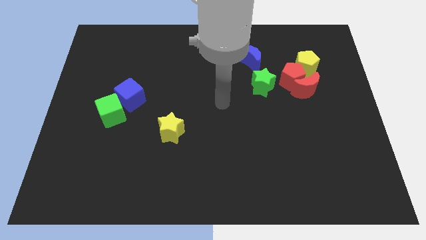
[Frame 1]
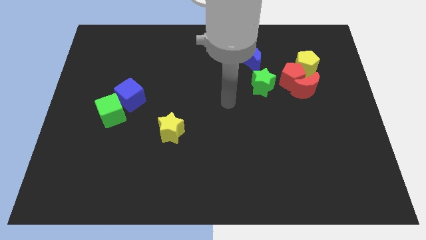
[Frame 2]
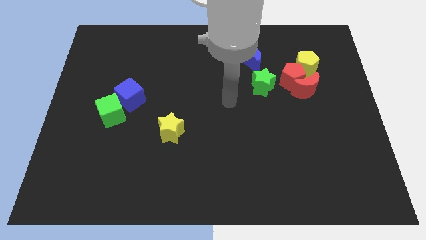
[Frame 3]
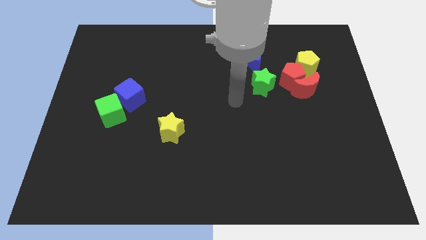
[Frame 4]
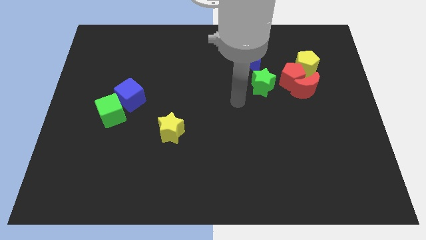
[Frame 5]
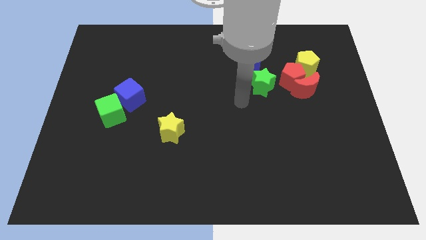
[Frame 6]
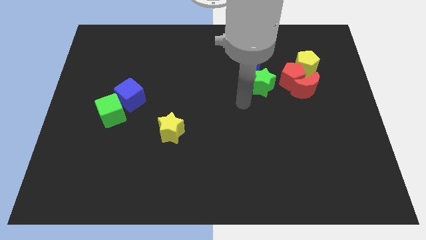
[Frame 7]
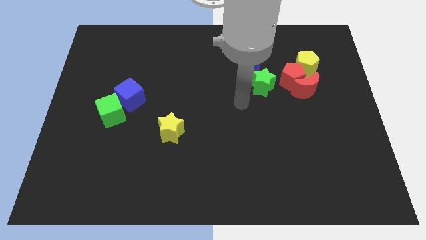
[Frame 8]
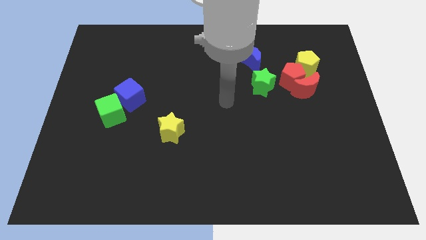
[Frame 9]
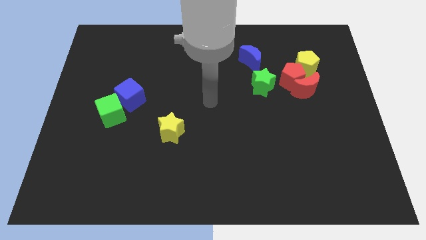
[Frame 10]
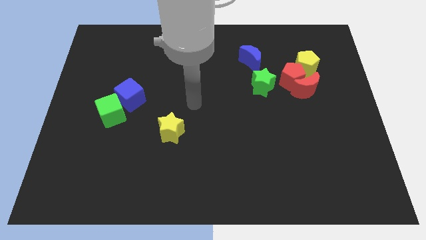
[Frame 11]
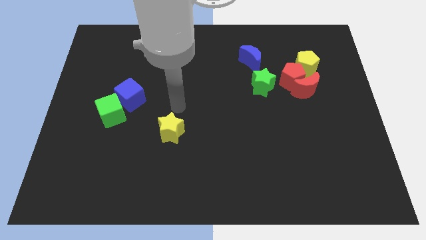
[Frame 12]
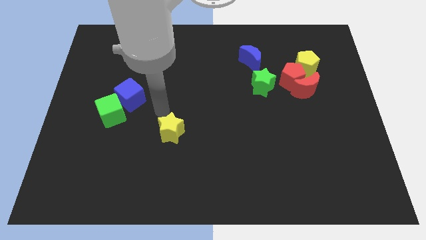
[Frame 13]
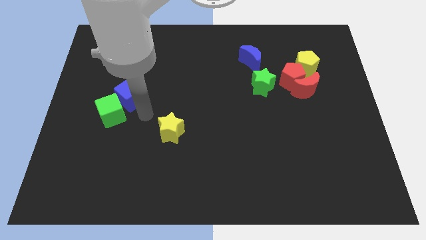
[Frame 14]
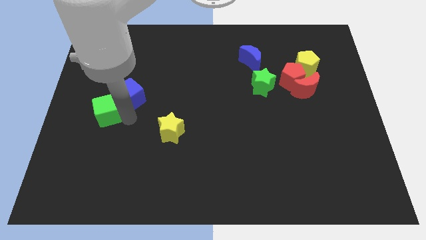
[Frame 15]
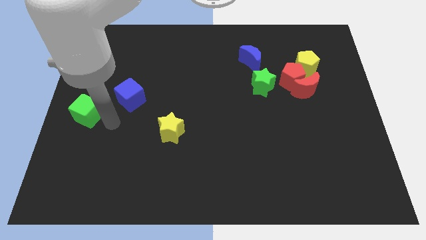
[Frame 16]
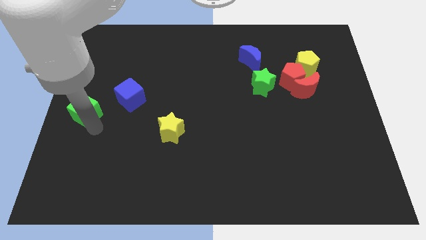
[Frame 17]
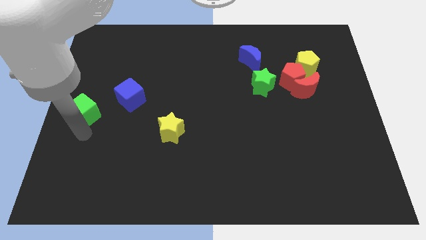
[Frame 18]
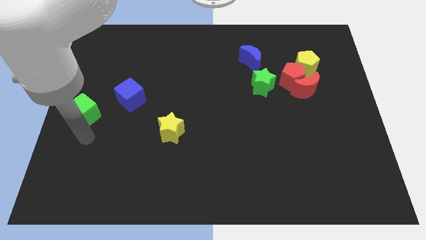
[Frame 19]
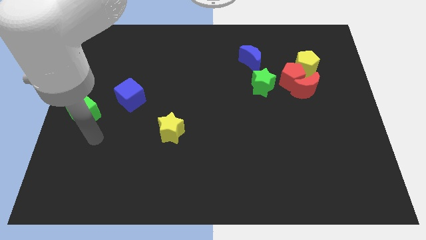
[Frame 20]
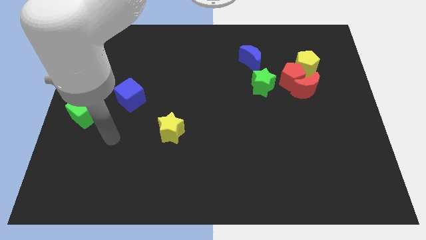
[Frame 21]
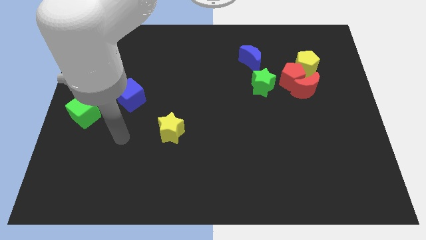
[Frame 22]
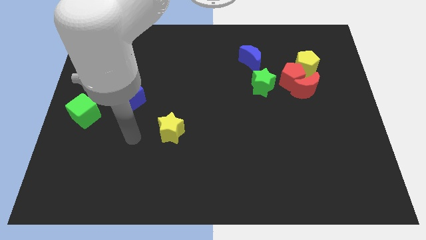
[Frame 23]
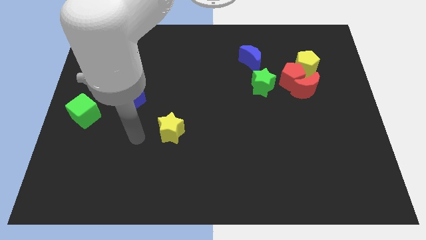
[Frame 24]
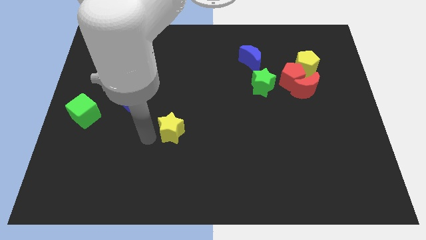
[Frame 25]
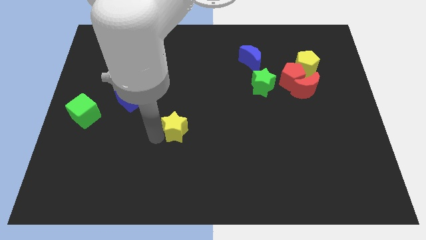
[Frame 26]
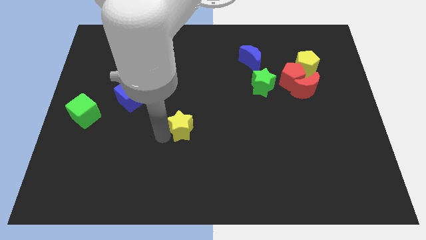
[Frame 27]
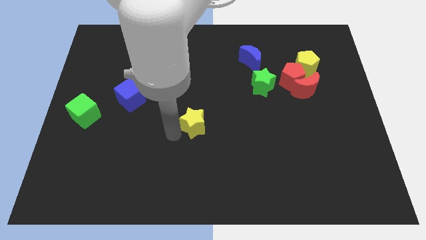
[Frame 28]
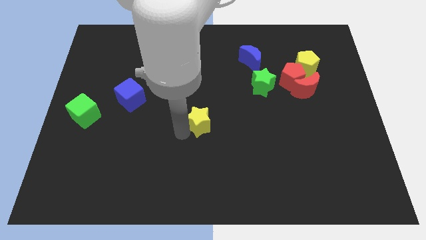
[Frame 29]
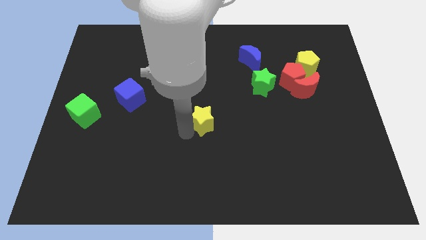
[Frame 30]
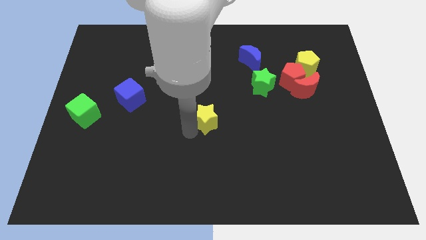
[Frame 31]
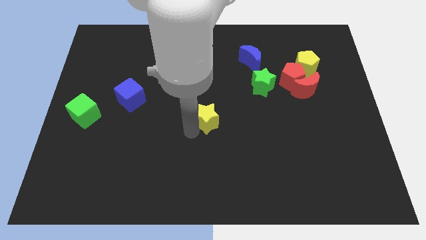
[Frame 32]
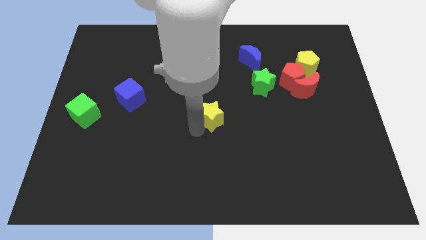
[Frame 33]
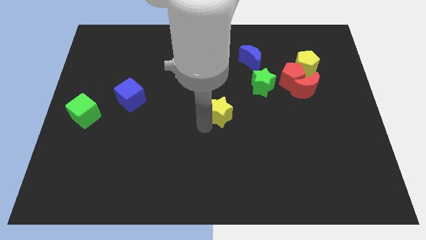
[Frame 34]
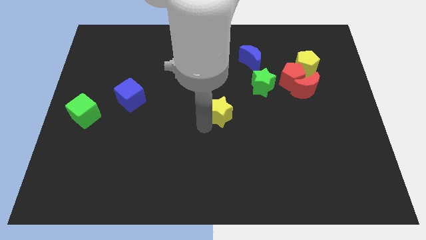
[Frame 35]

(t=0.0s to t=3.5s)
separate the green cube and the blue cube

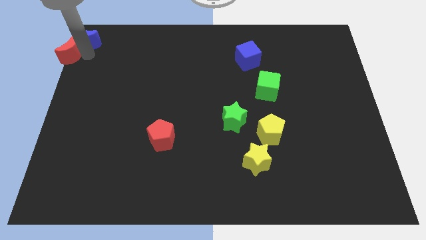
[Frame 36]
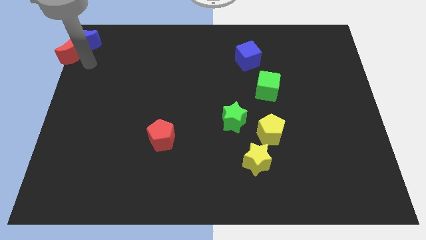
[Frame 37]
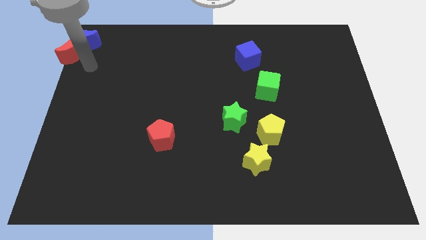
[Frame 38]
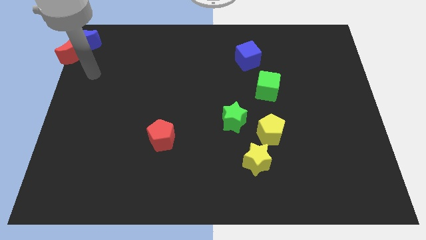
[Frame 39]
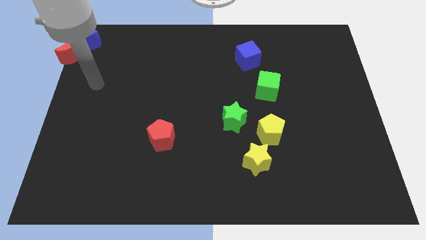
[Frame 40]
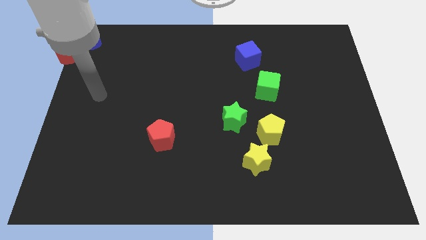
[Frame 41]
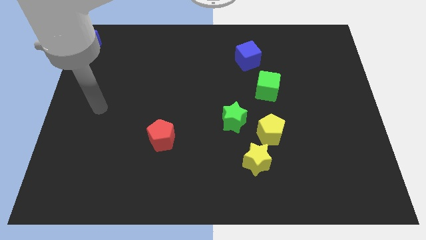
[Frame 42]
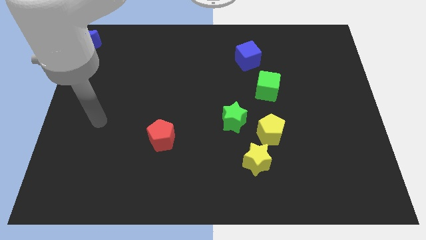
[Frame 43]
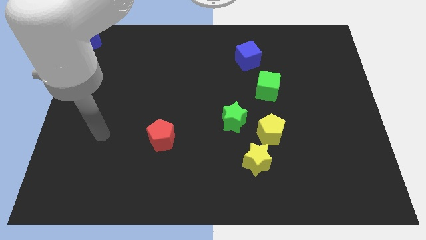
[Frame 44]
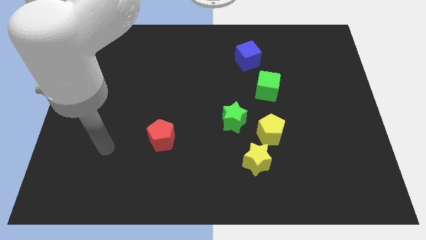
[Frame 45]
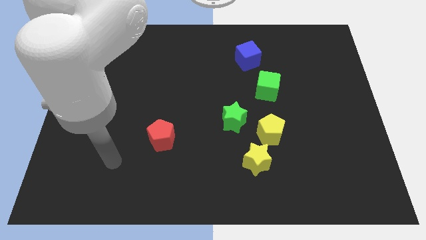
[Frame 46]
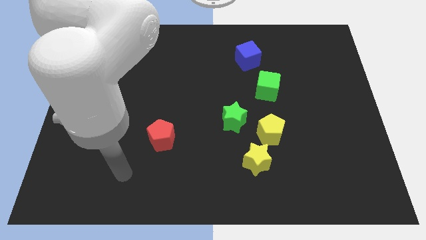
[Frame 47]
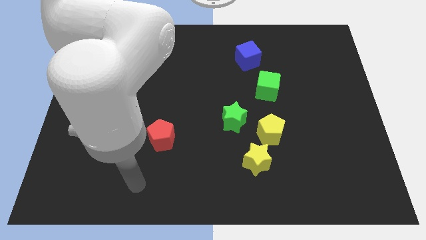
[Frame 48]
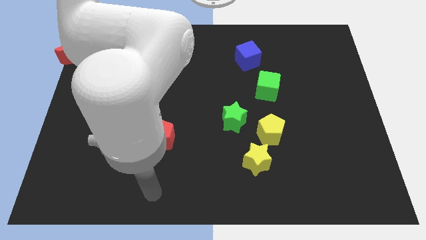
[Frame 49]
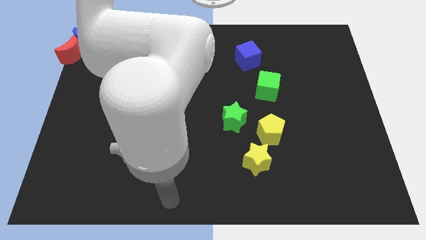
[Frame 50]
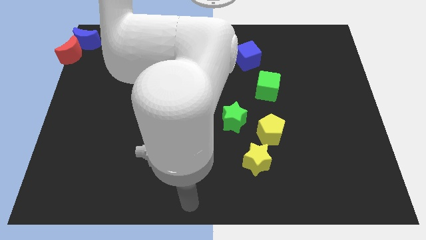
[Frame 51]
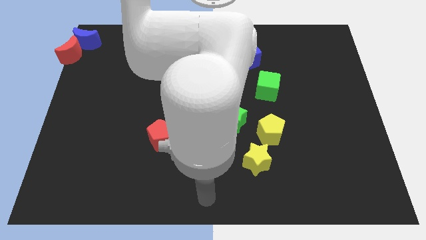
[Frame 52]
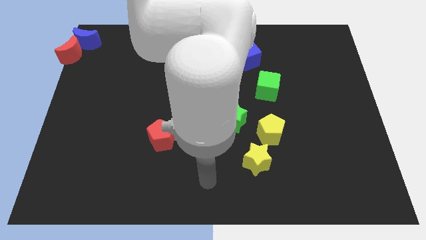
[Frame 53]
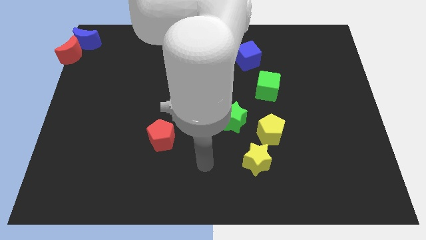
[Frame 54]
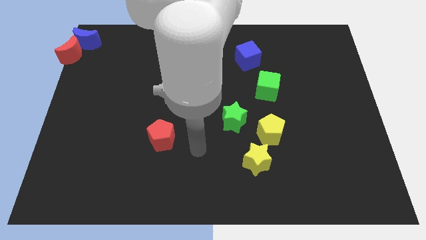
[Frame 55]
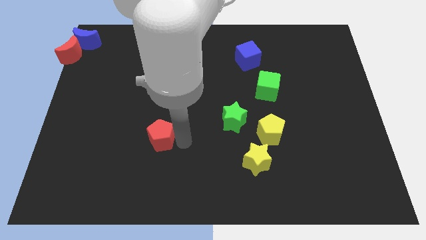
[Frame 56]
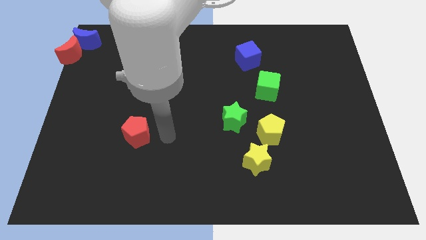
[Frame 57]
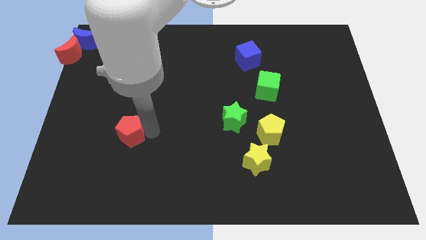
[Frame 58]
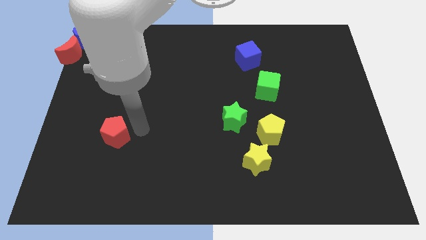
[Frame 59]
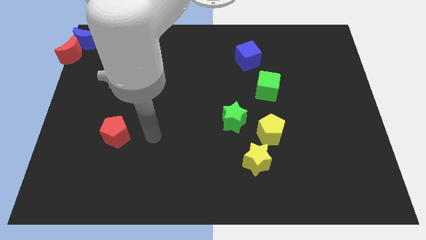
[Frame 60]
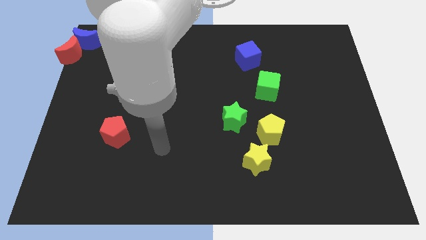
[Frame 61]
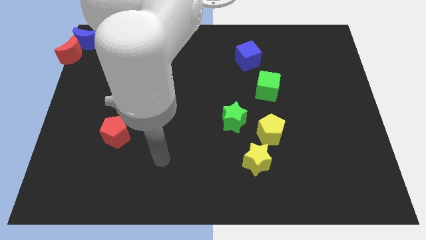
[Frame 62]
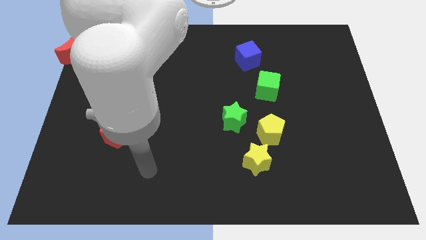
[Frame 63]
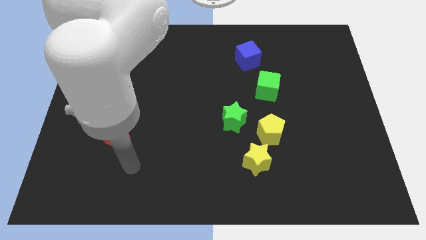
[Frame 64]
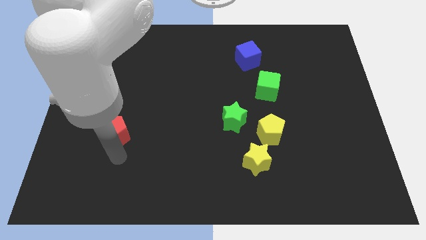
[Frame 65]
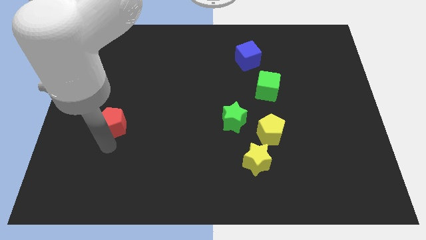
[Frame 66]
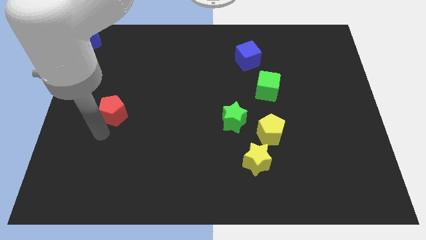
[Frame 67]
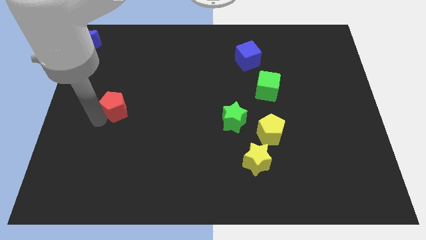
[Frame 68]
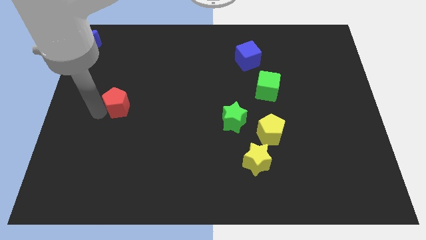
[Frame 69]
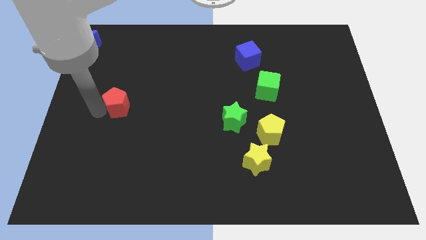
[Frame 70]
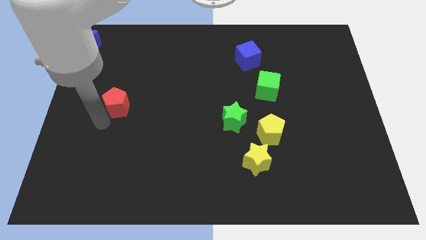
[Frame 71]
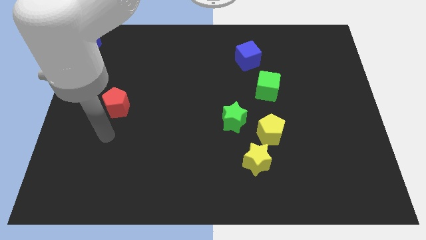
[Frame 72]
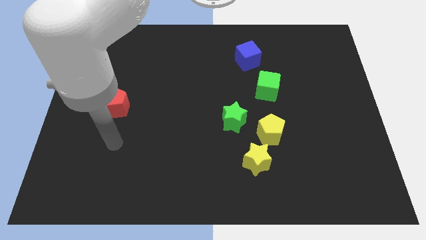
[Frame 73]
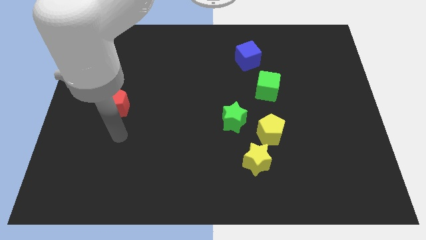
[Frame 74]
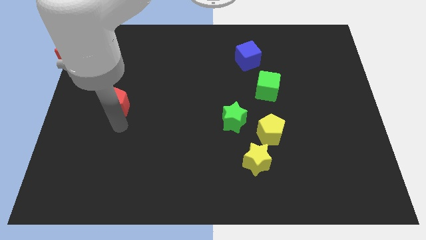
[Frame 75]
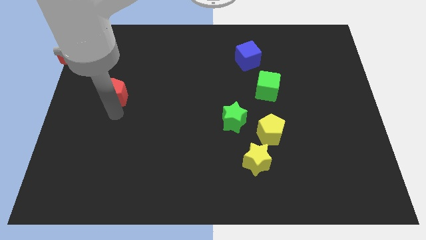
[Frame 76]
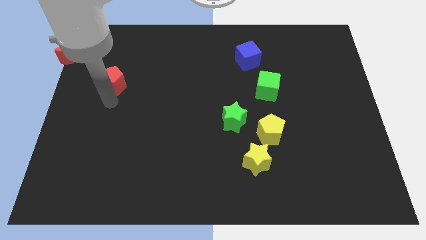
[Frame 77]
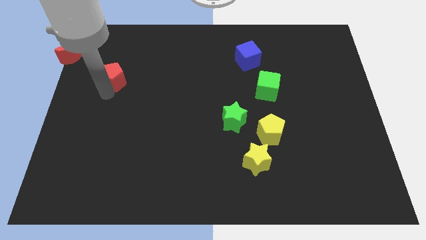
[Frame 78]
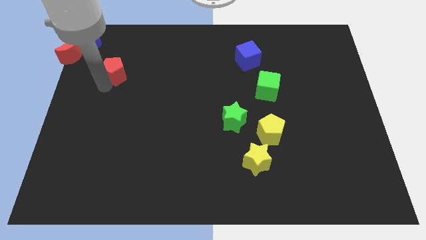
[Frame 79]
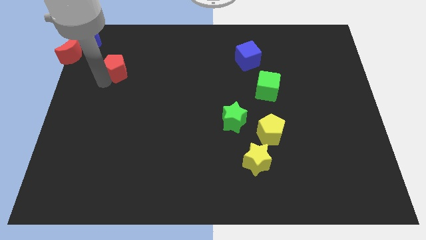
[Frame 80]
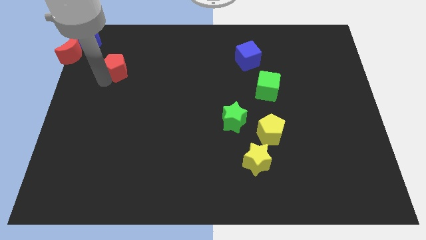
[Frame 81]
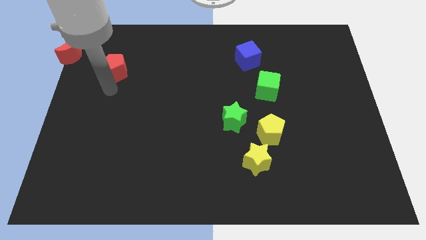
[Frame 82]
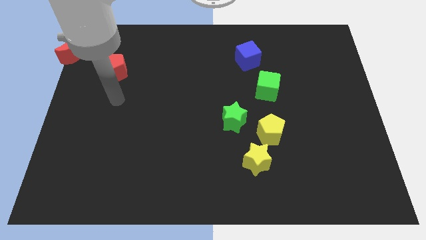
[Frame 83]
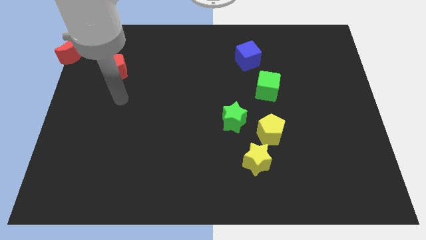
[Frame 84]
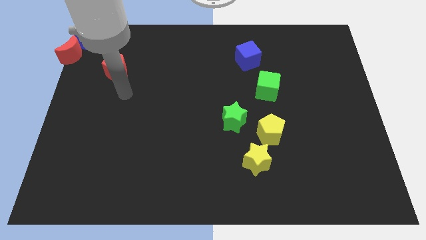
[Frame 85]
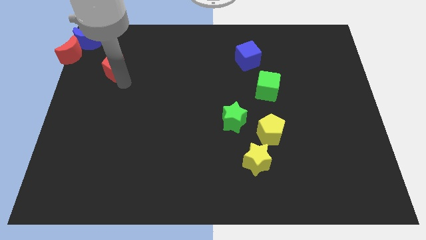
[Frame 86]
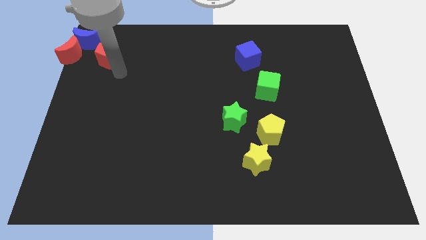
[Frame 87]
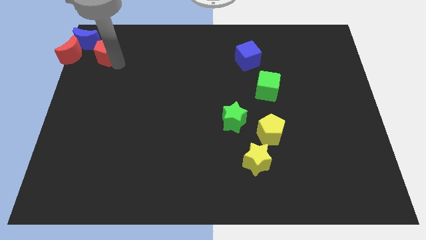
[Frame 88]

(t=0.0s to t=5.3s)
move the red pentagon towards the blue crescent

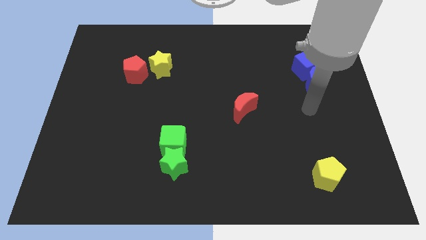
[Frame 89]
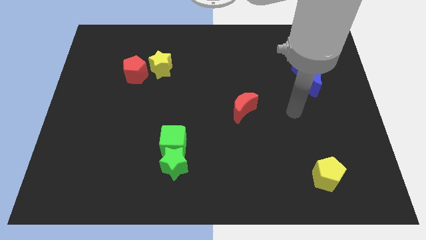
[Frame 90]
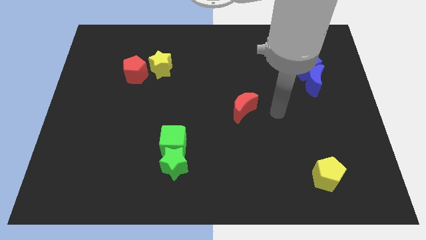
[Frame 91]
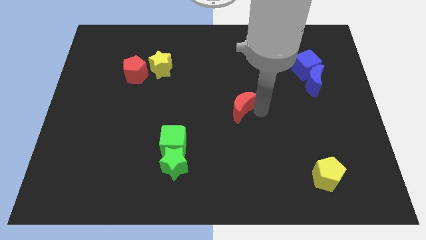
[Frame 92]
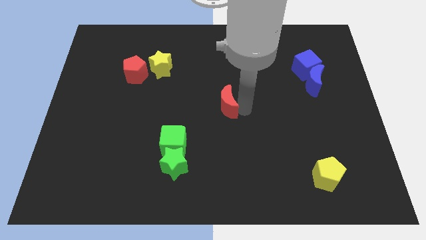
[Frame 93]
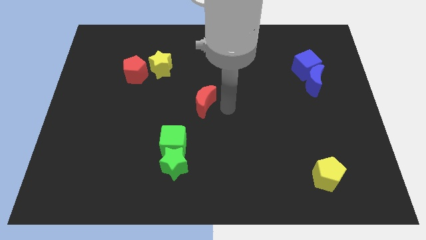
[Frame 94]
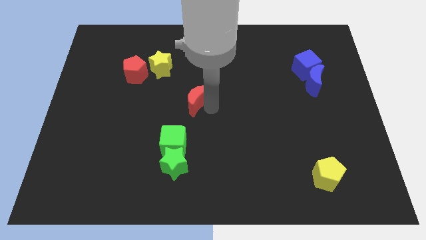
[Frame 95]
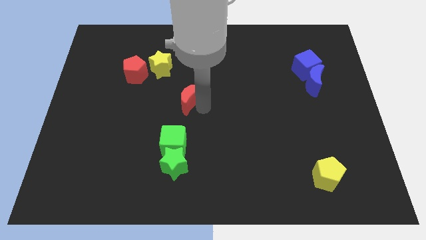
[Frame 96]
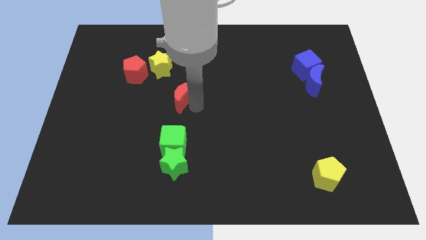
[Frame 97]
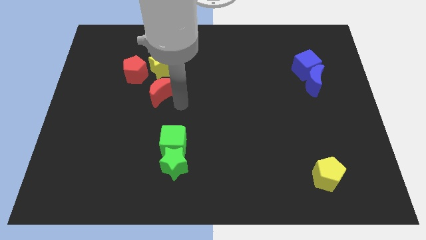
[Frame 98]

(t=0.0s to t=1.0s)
move the red crescent to the top of the green cube
